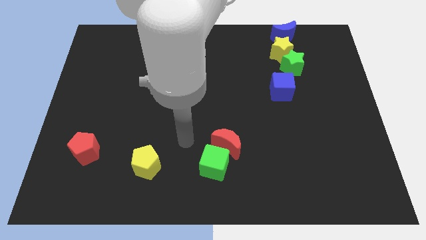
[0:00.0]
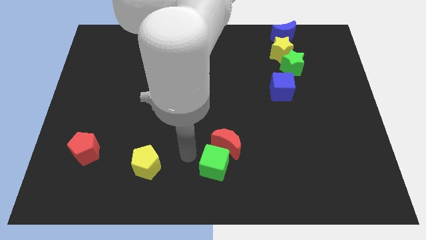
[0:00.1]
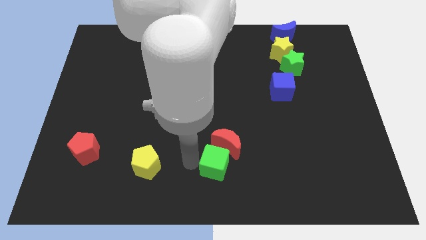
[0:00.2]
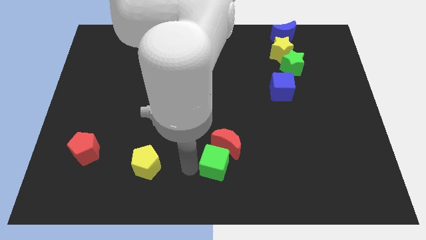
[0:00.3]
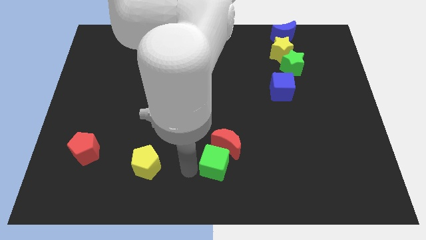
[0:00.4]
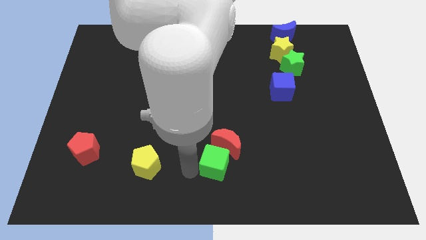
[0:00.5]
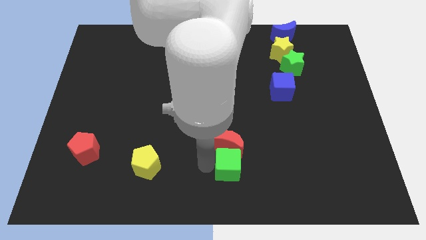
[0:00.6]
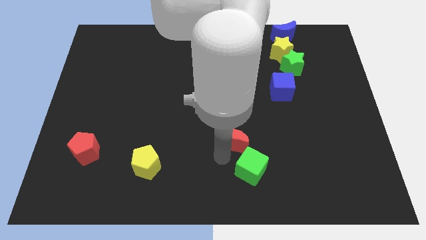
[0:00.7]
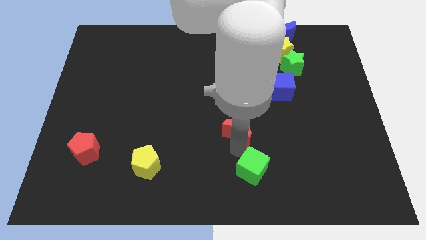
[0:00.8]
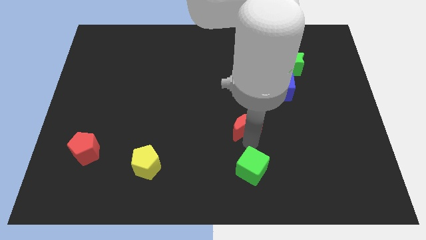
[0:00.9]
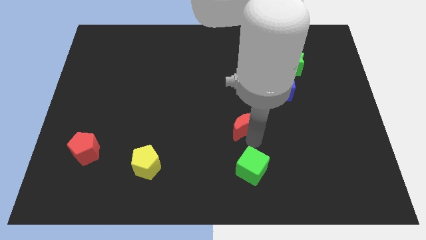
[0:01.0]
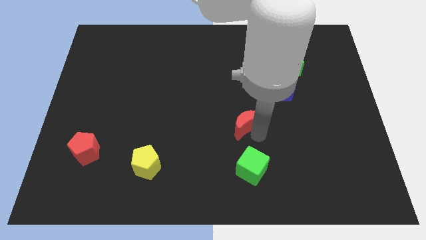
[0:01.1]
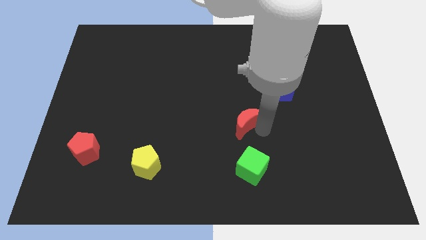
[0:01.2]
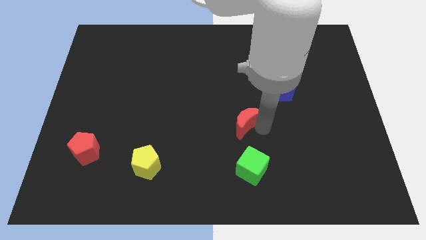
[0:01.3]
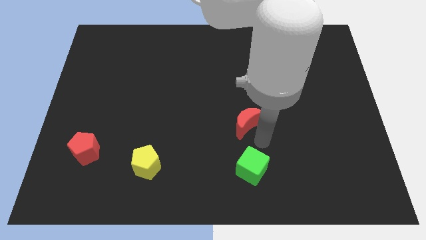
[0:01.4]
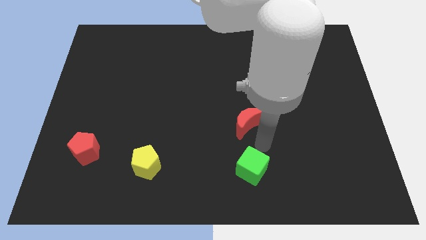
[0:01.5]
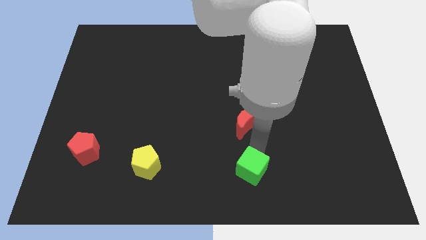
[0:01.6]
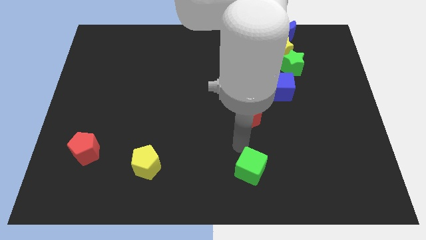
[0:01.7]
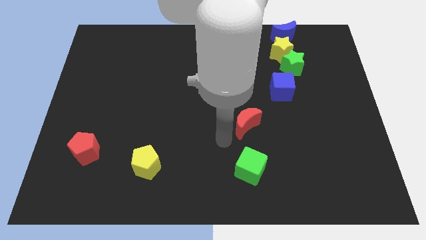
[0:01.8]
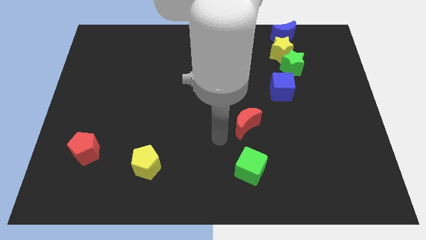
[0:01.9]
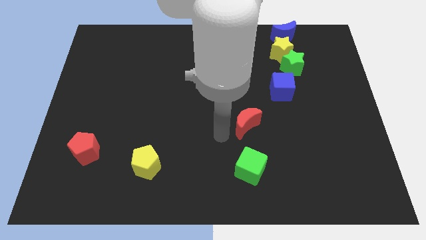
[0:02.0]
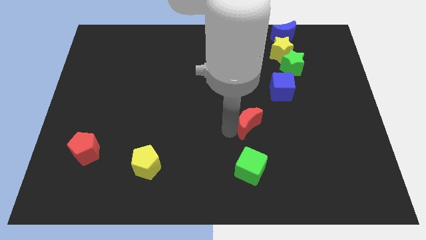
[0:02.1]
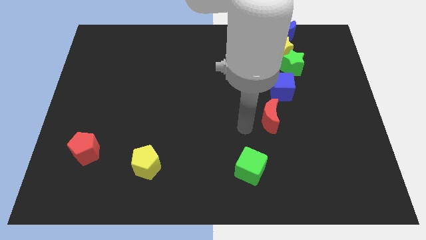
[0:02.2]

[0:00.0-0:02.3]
separate the red moon and green cube

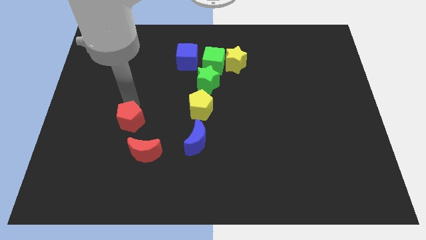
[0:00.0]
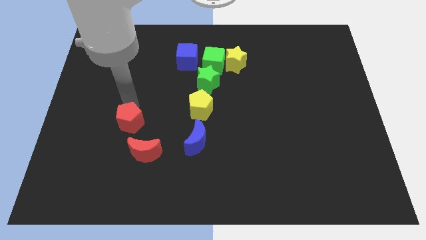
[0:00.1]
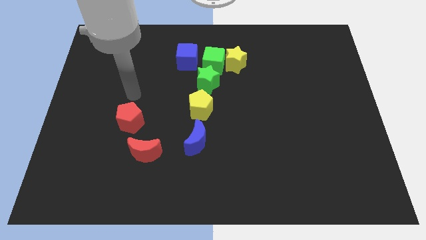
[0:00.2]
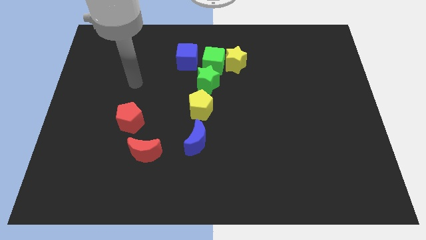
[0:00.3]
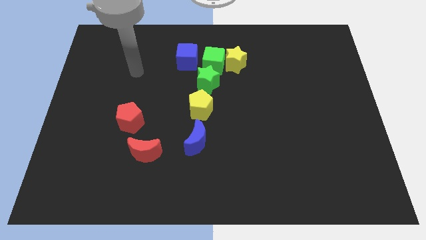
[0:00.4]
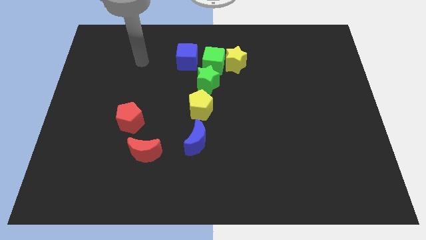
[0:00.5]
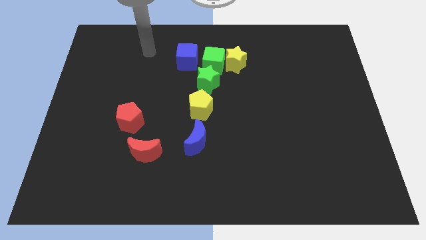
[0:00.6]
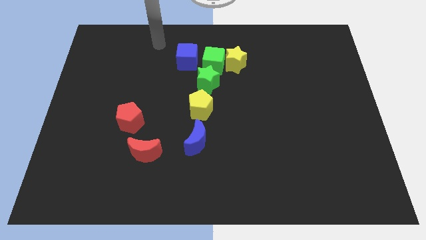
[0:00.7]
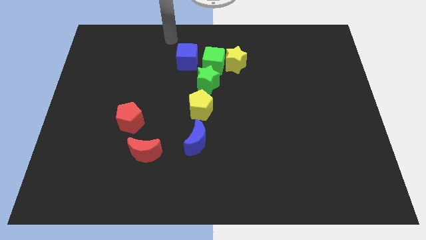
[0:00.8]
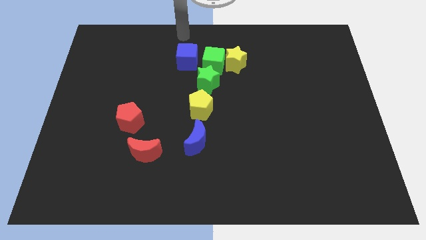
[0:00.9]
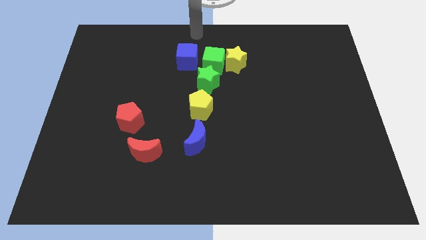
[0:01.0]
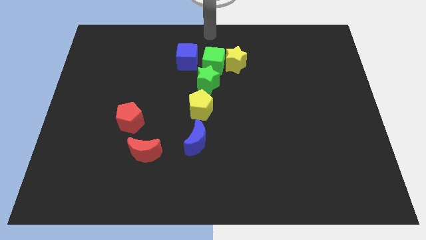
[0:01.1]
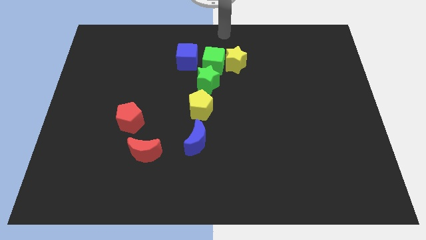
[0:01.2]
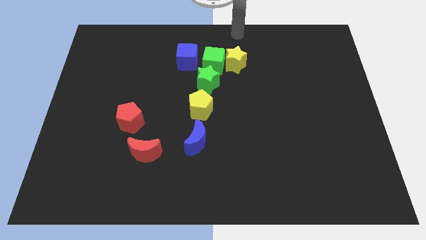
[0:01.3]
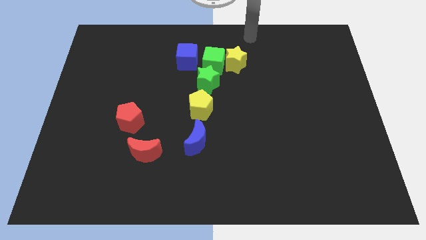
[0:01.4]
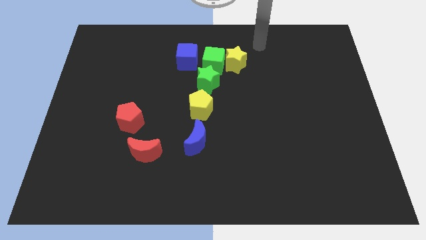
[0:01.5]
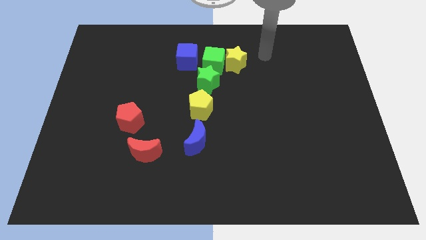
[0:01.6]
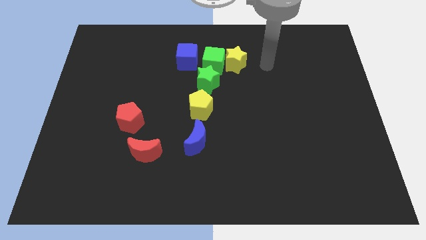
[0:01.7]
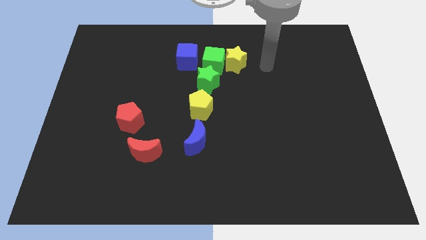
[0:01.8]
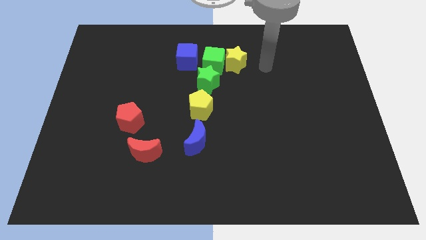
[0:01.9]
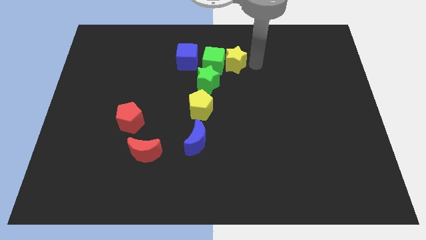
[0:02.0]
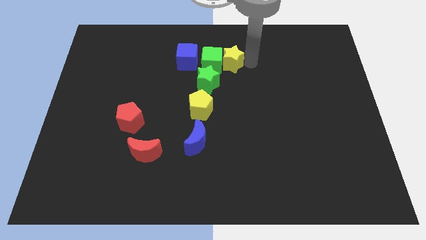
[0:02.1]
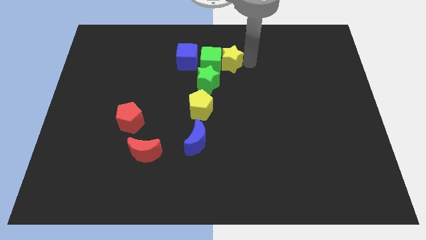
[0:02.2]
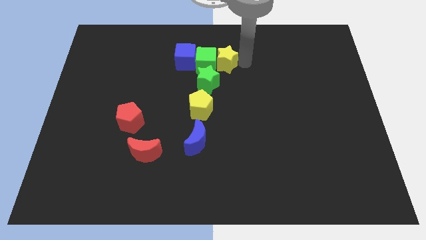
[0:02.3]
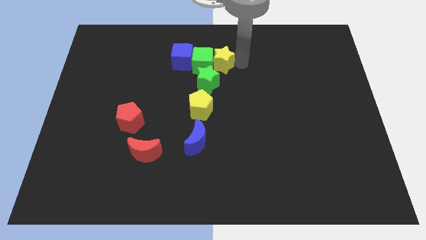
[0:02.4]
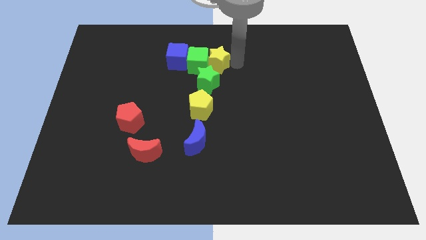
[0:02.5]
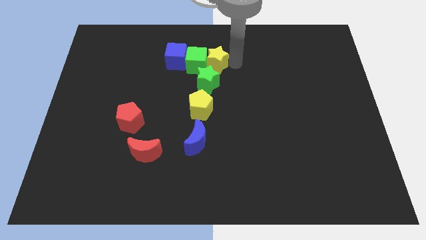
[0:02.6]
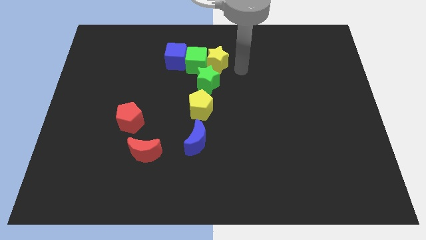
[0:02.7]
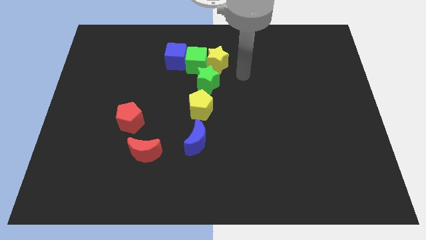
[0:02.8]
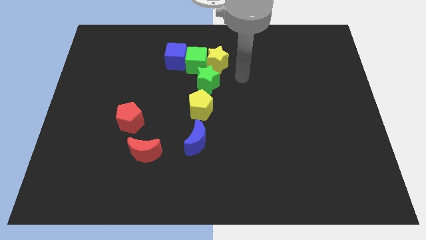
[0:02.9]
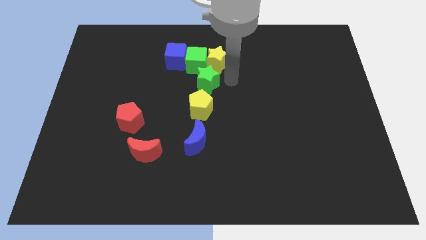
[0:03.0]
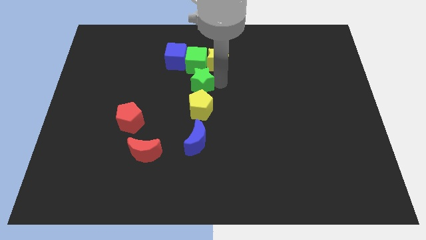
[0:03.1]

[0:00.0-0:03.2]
push the yellow star into the green cube

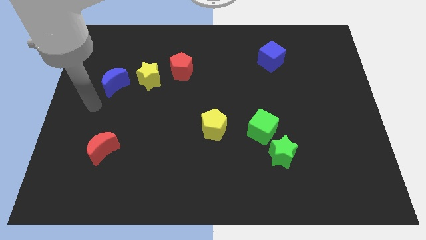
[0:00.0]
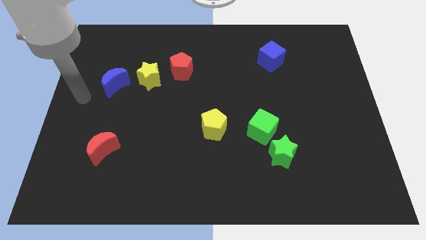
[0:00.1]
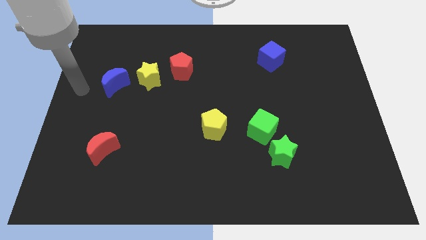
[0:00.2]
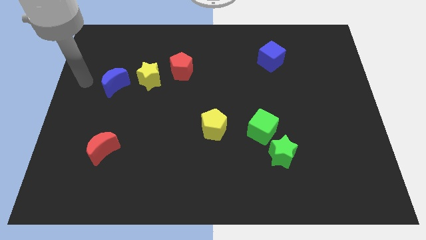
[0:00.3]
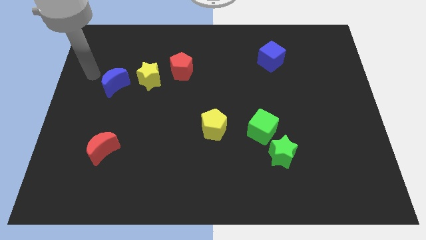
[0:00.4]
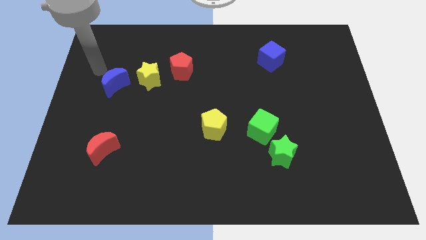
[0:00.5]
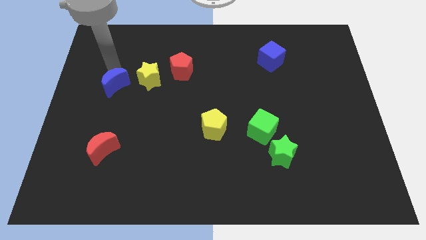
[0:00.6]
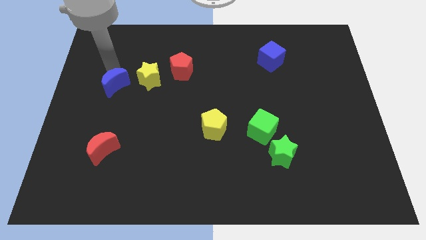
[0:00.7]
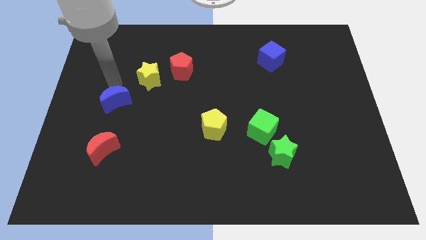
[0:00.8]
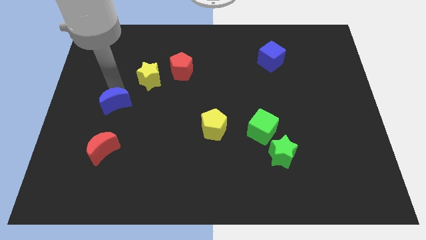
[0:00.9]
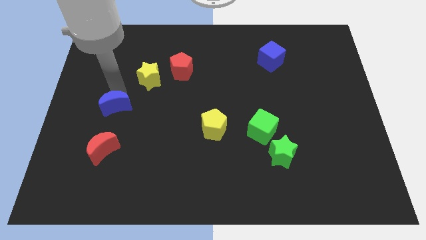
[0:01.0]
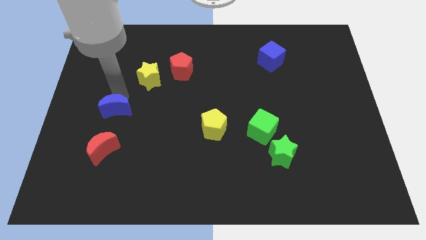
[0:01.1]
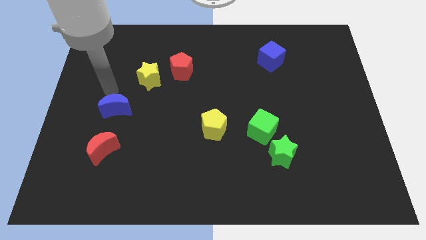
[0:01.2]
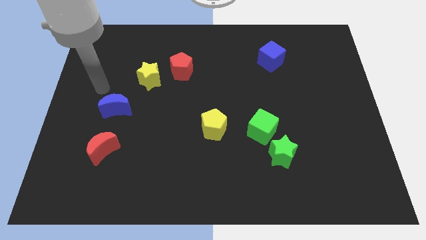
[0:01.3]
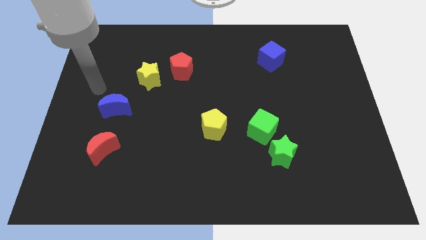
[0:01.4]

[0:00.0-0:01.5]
push the blue moon downwards

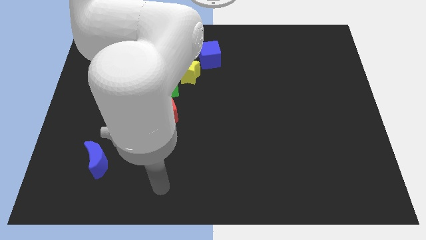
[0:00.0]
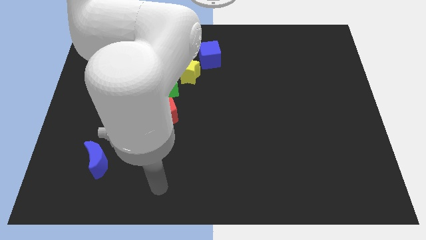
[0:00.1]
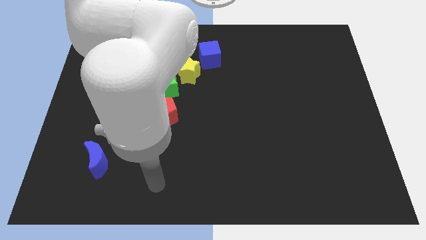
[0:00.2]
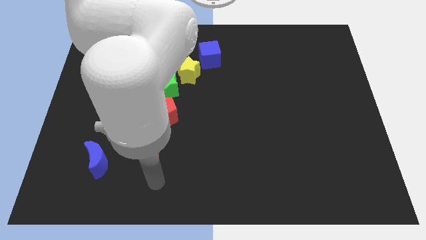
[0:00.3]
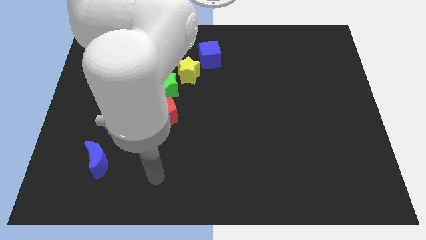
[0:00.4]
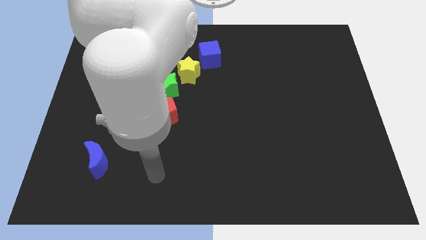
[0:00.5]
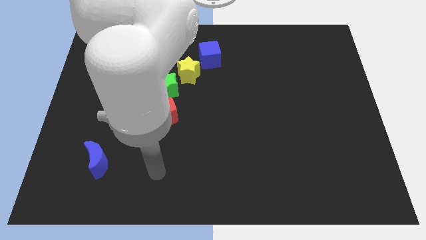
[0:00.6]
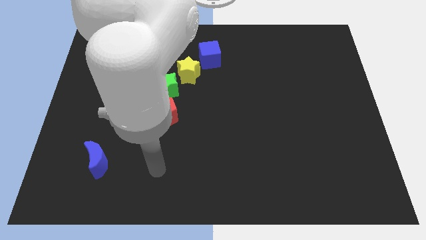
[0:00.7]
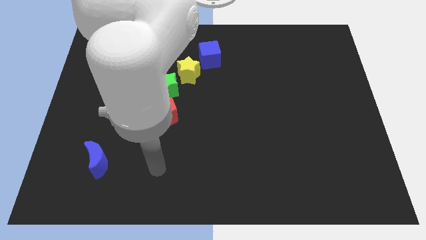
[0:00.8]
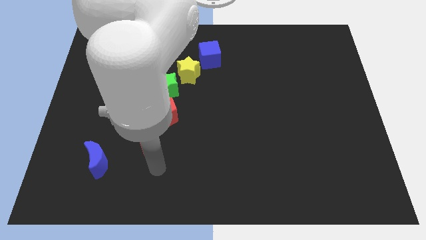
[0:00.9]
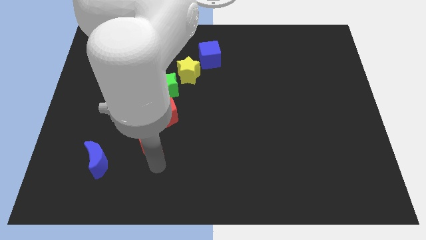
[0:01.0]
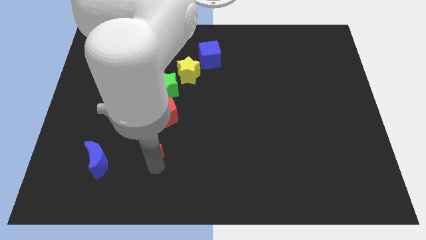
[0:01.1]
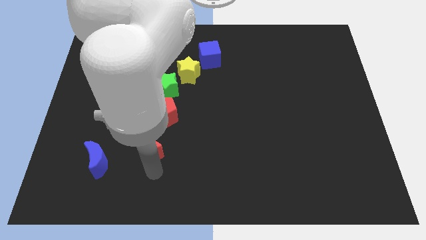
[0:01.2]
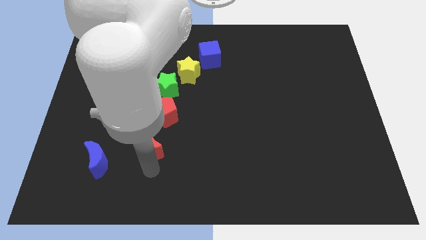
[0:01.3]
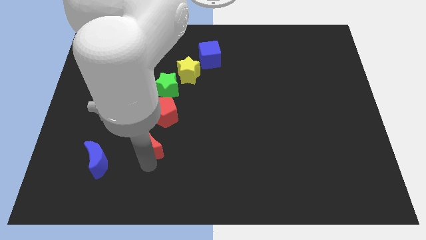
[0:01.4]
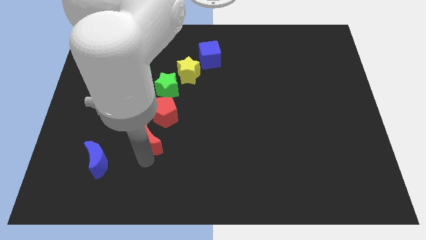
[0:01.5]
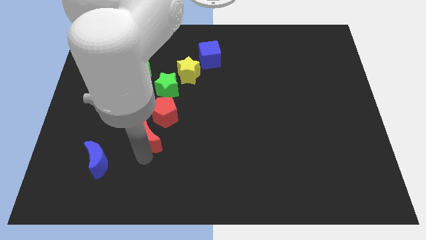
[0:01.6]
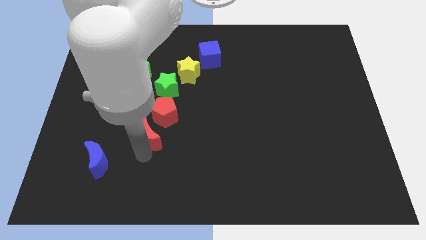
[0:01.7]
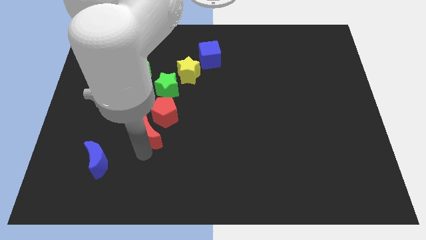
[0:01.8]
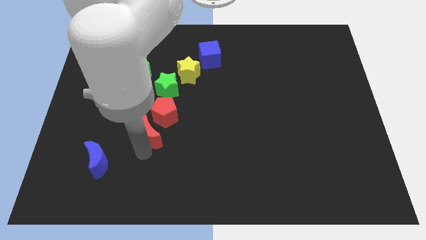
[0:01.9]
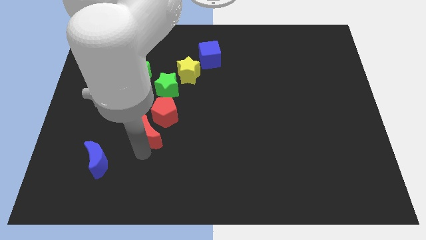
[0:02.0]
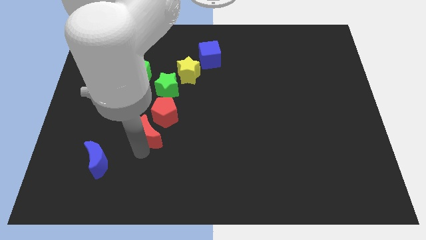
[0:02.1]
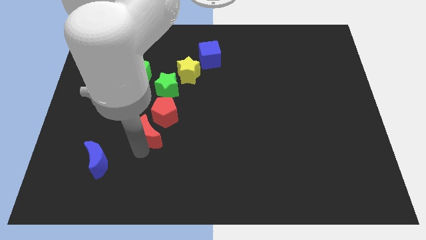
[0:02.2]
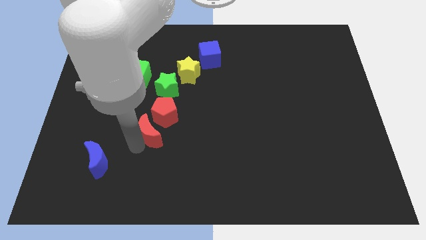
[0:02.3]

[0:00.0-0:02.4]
place the red moon at the bottom left side of the red pentagon
